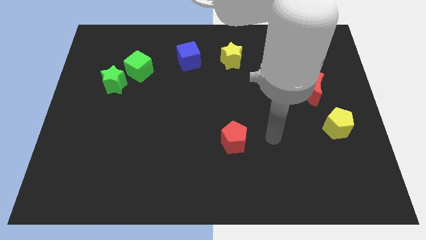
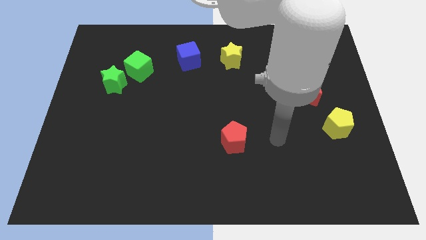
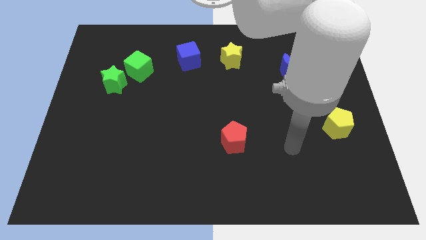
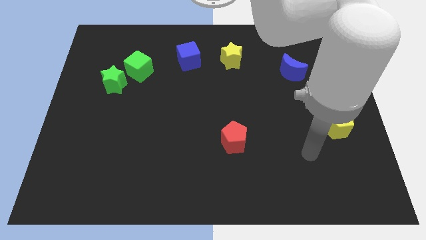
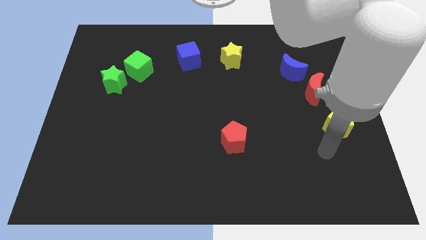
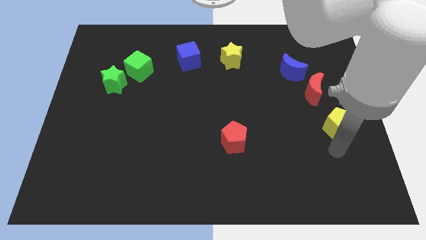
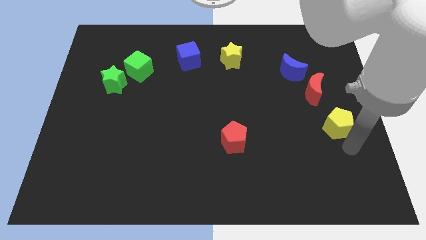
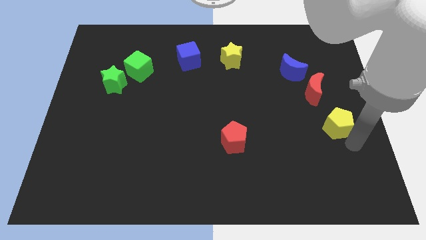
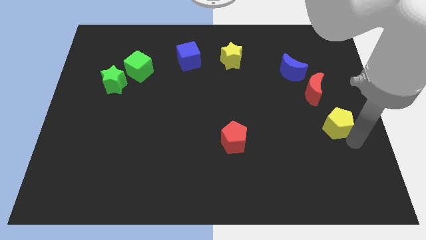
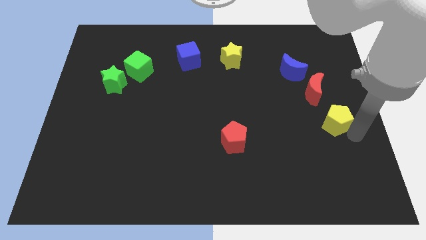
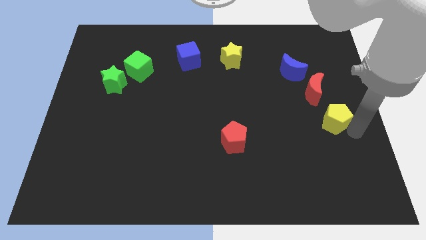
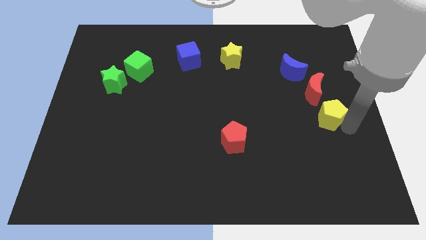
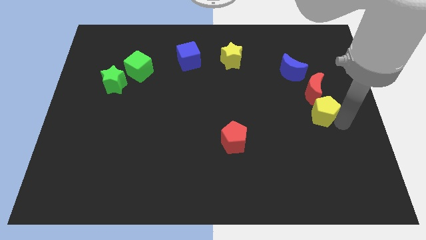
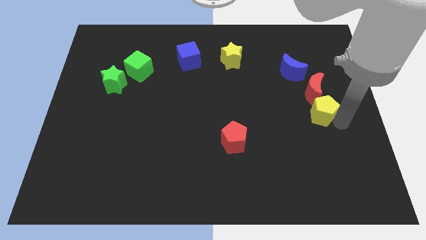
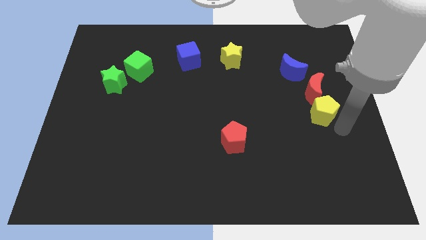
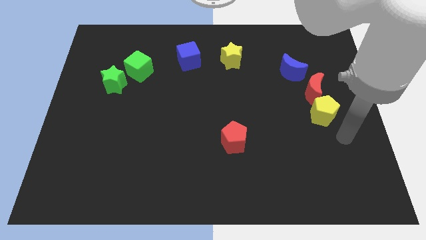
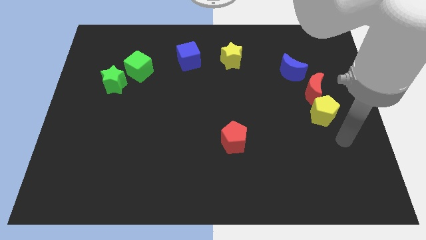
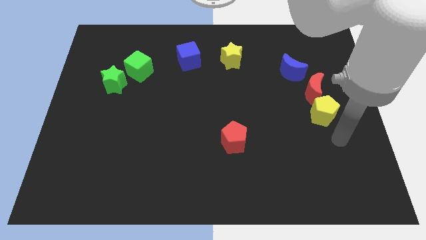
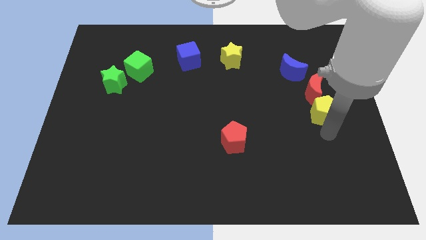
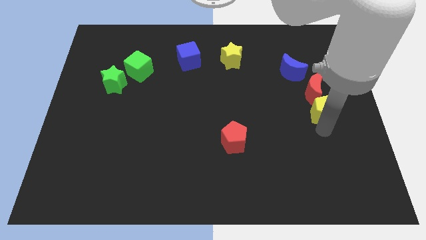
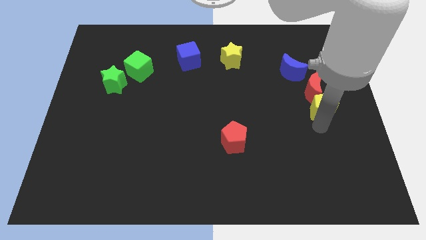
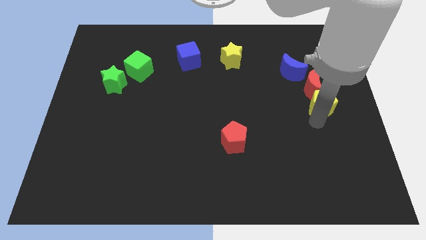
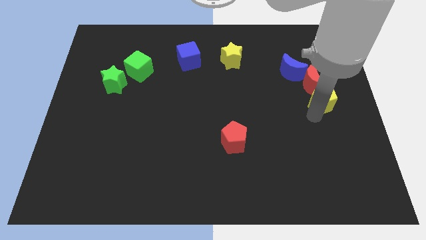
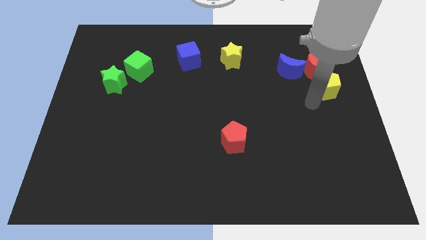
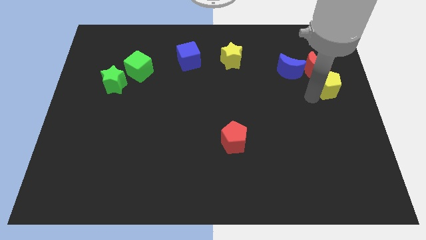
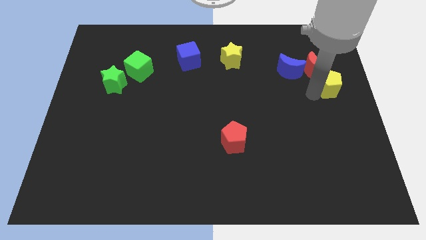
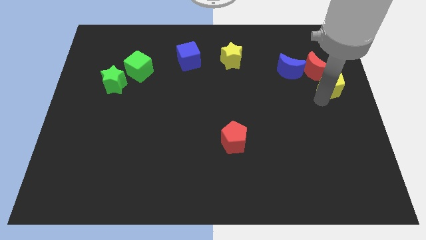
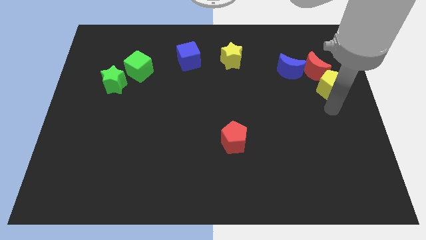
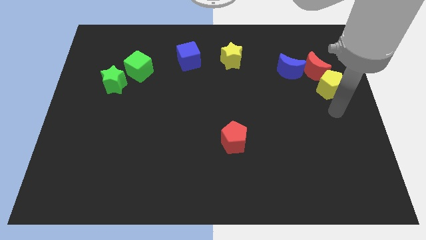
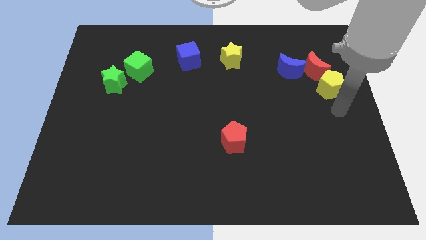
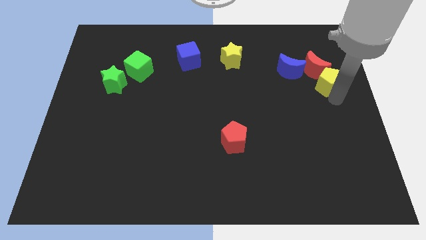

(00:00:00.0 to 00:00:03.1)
slightly push the yellow pentagon into red moon

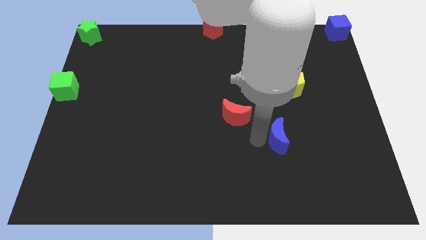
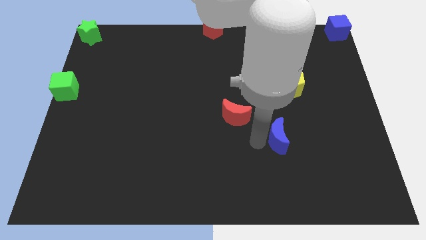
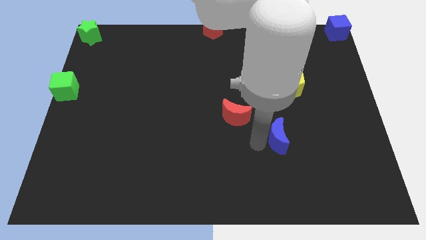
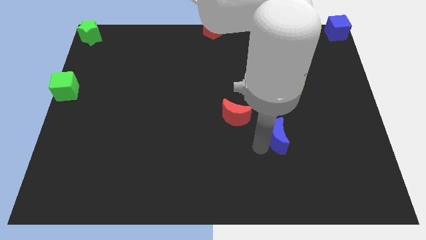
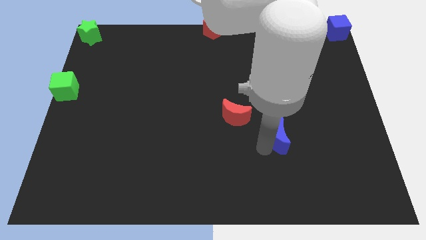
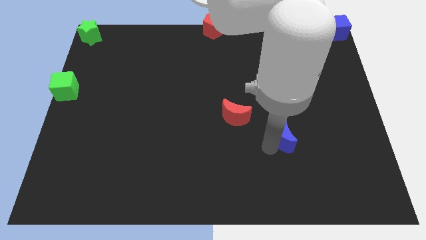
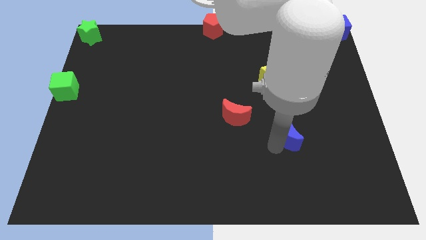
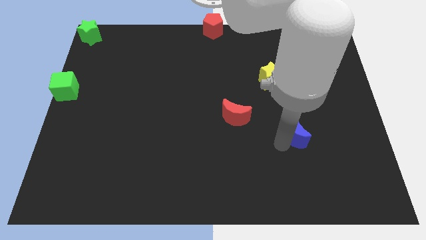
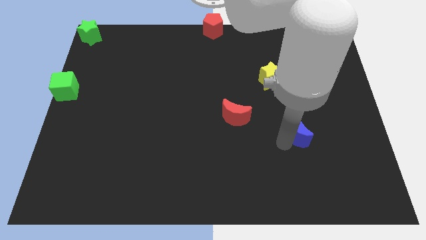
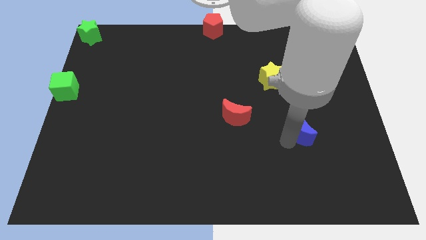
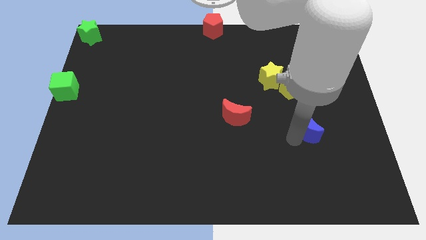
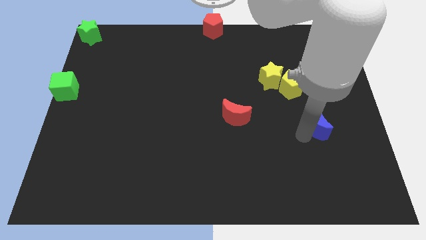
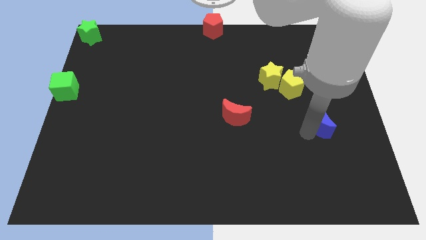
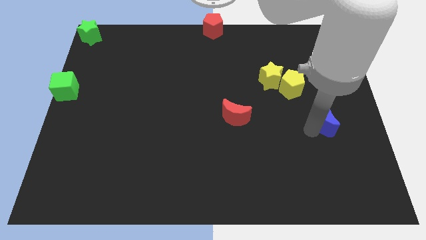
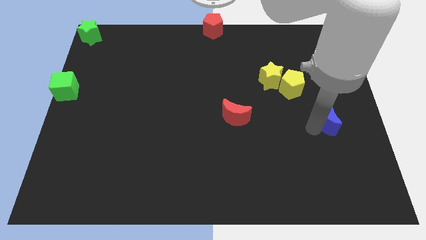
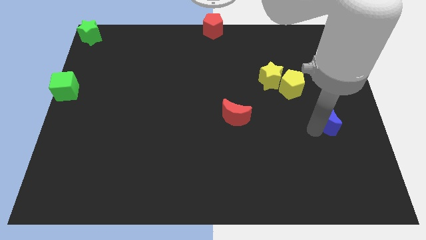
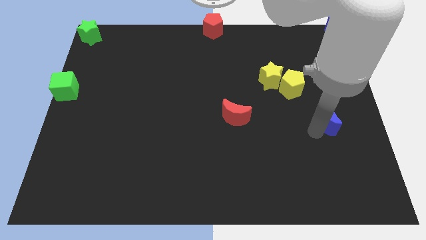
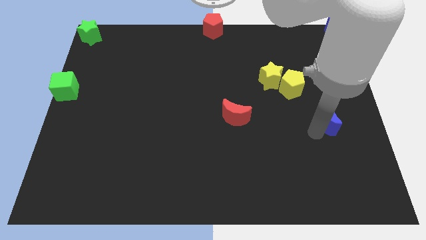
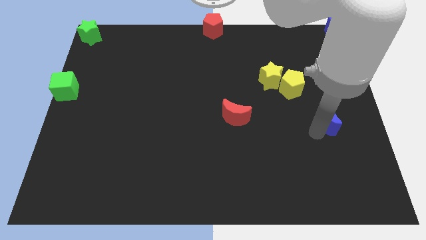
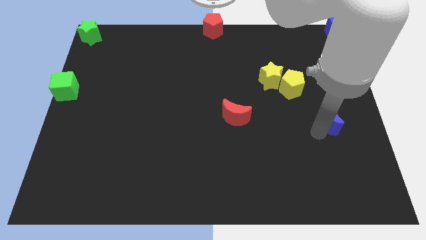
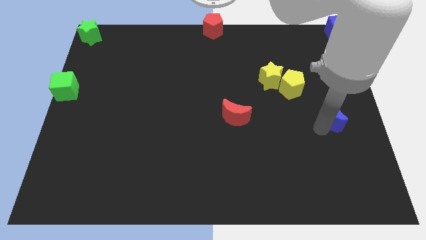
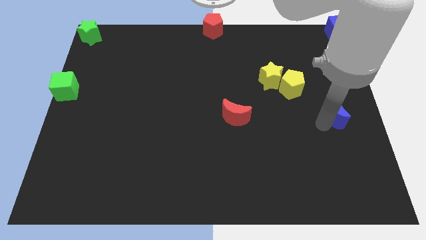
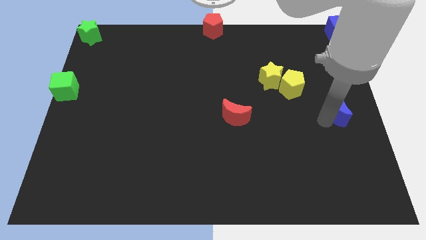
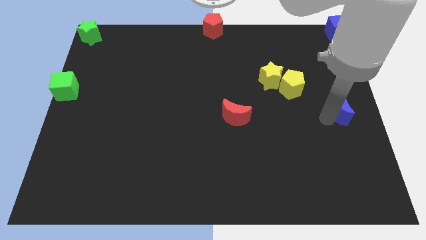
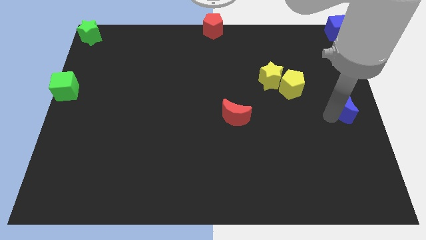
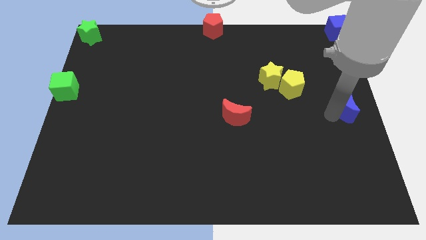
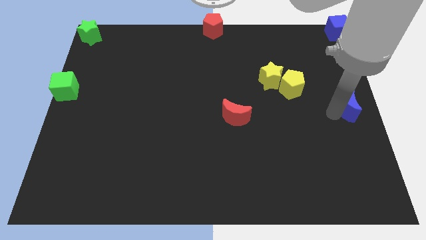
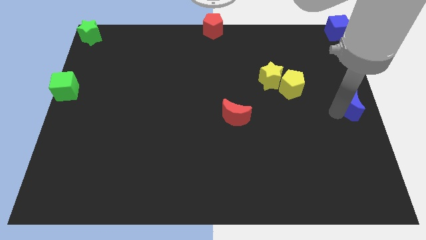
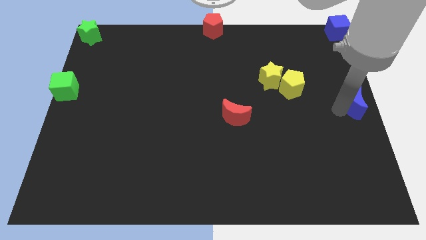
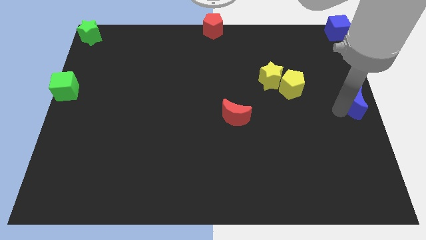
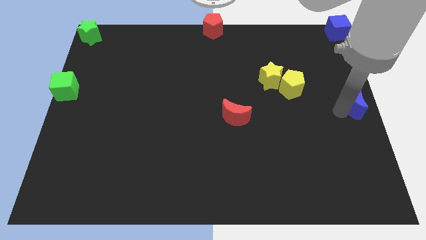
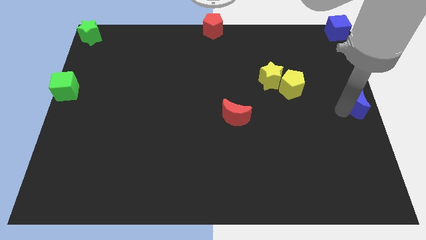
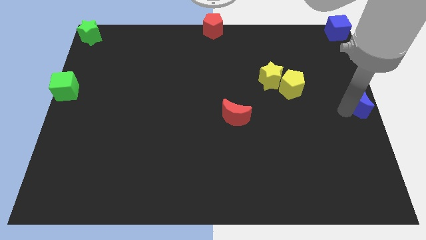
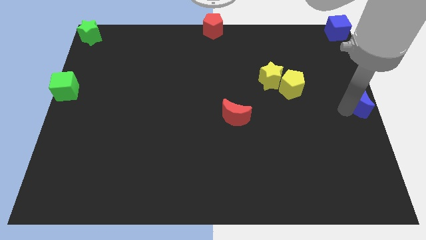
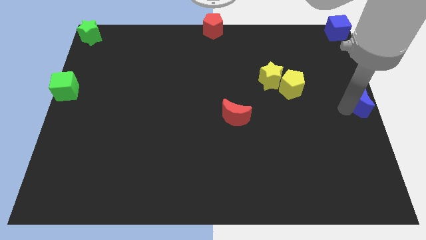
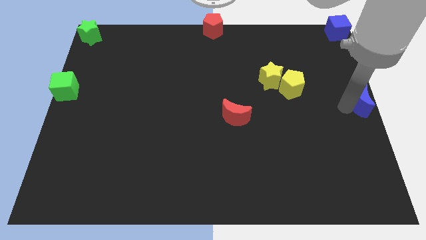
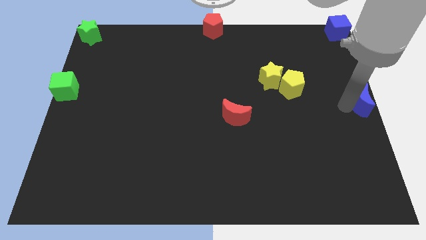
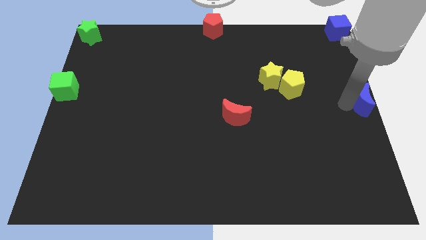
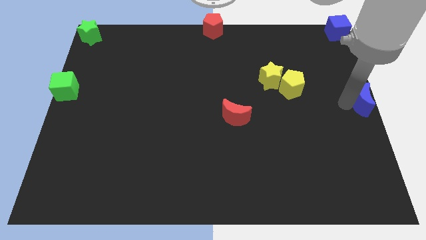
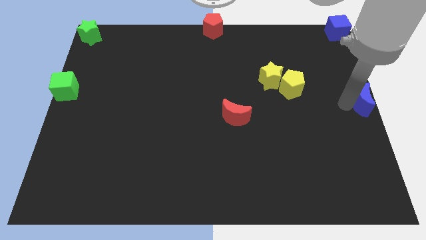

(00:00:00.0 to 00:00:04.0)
place the blue moon to the center right

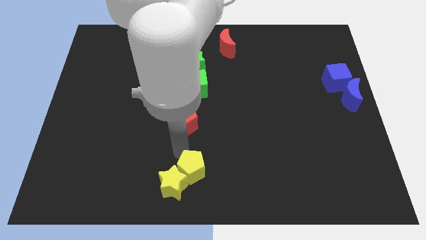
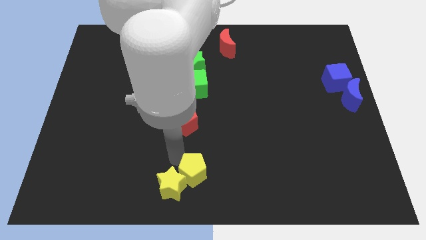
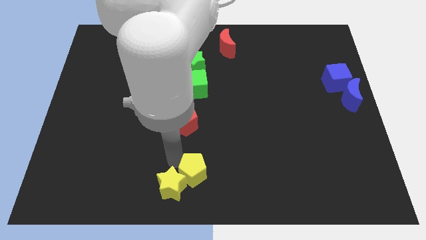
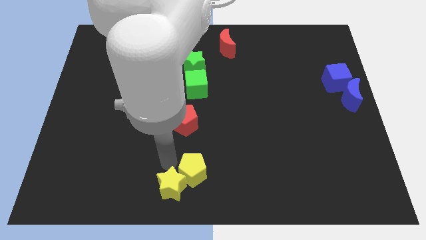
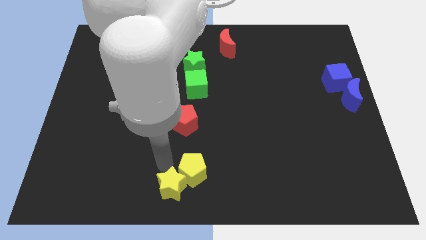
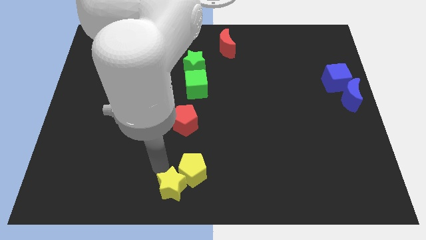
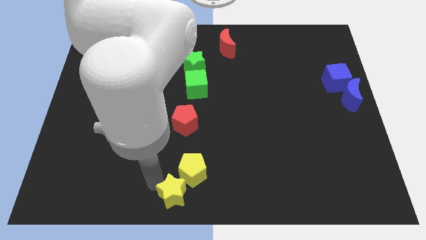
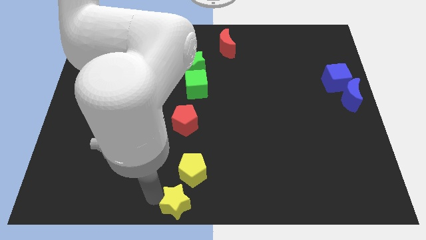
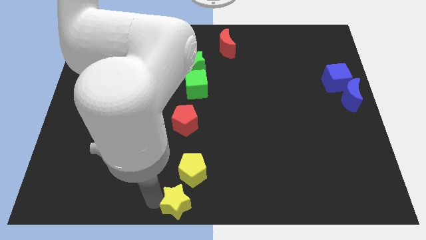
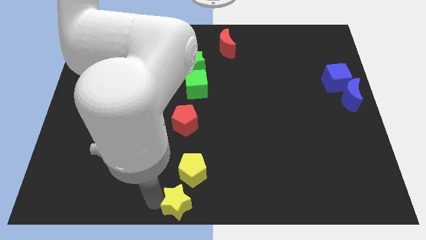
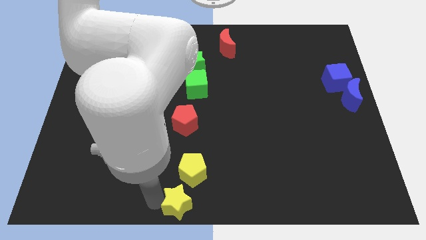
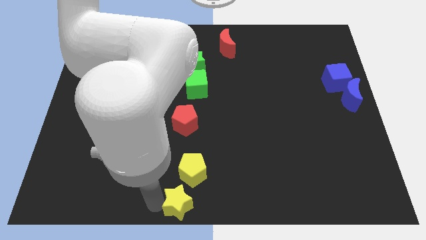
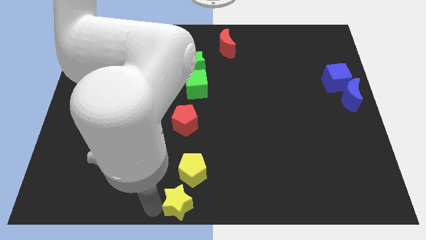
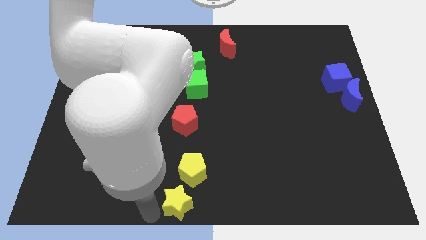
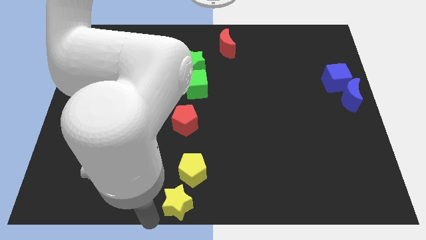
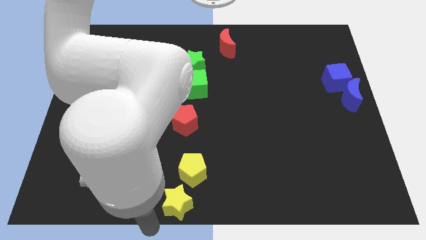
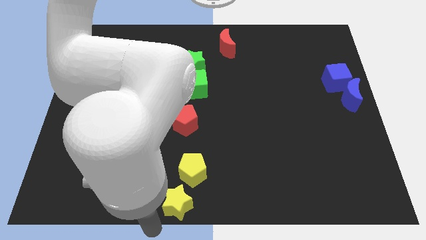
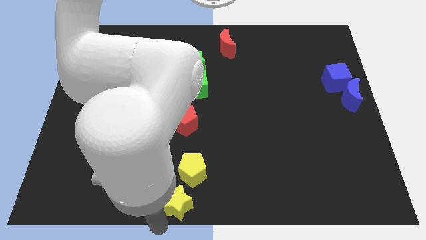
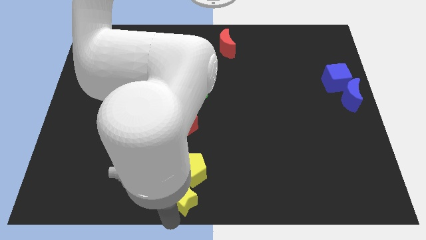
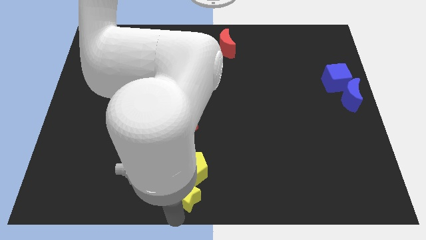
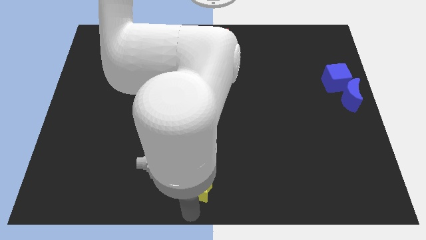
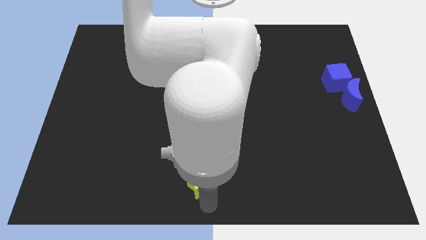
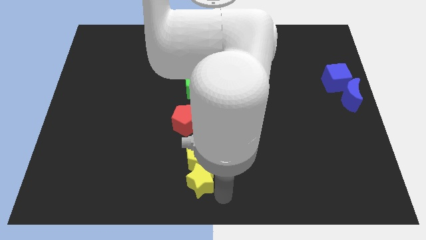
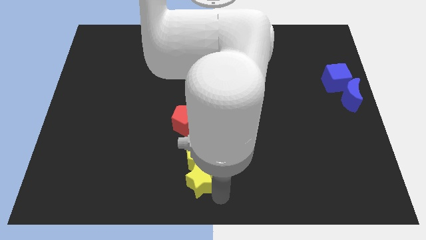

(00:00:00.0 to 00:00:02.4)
push yellow star below yellow pentagon
